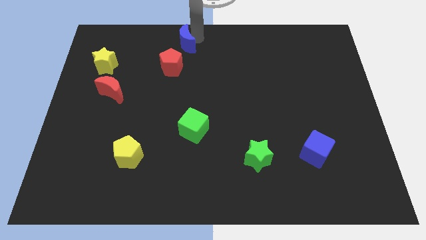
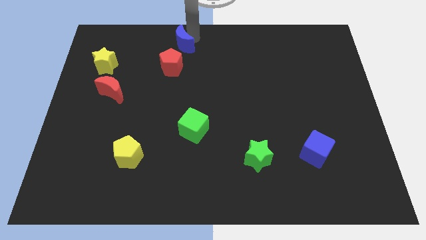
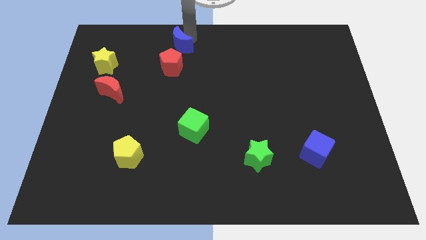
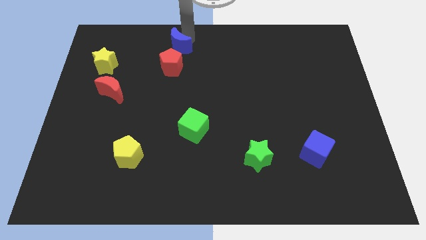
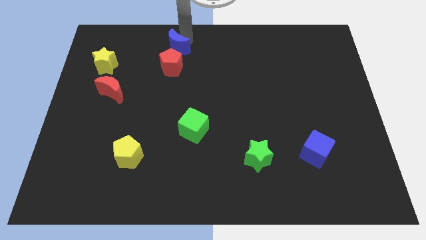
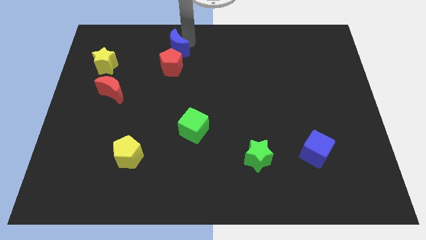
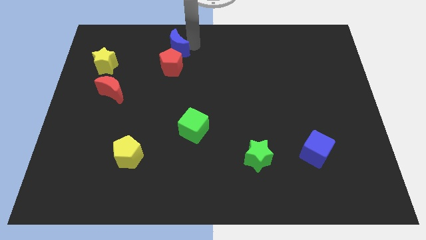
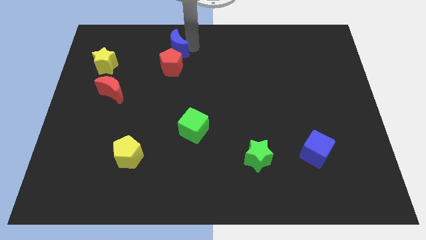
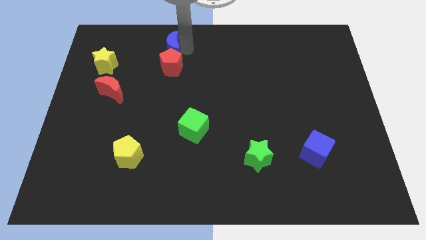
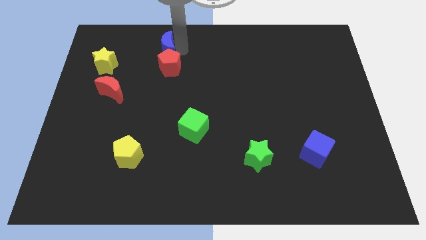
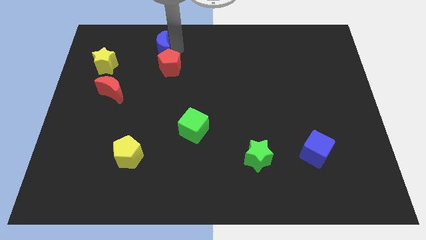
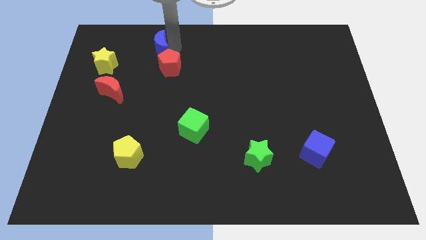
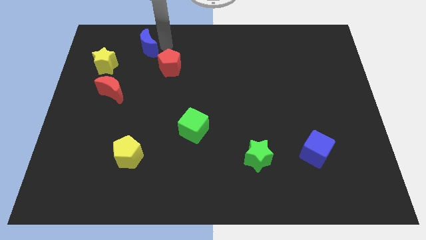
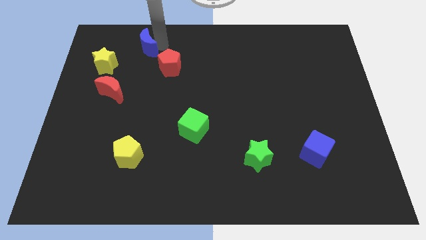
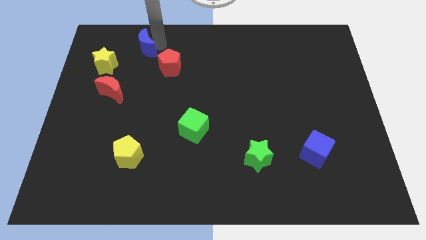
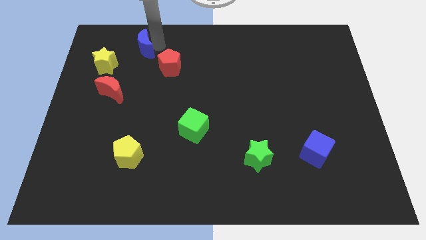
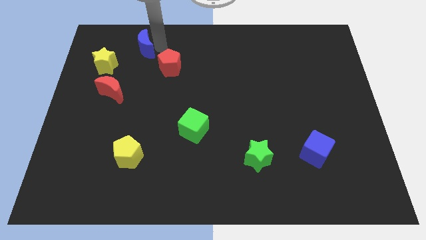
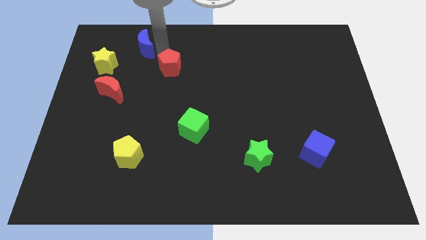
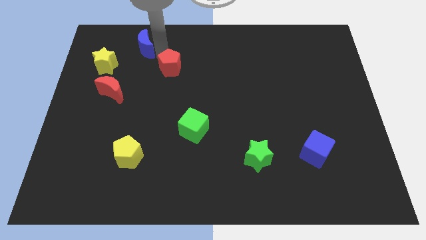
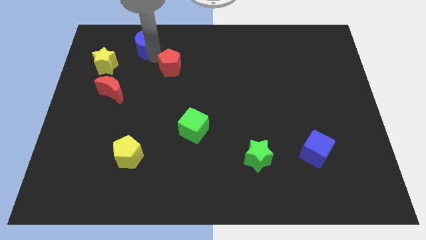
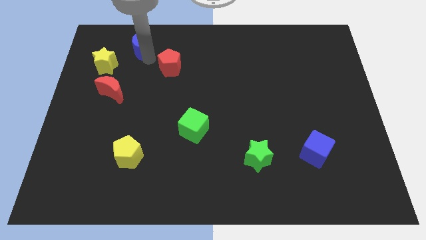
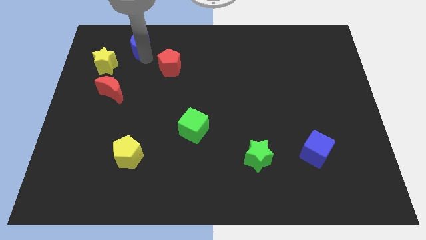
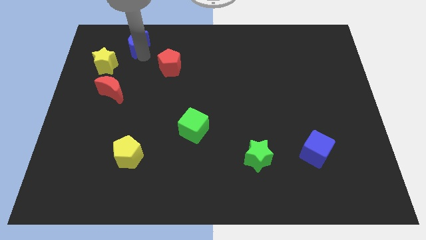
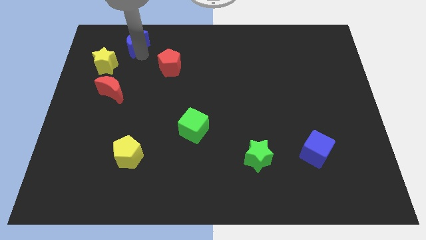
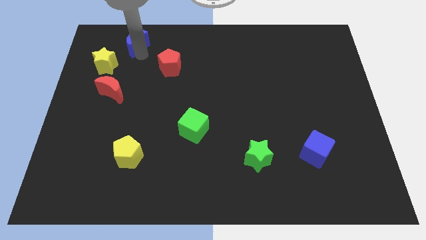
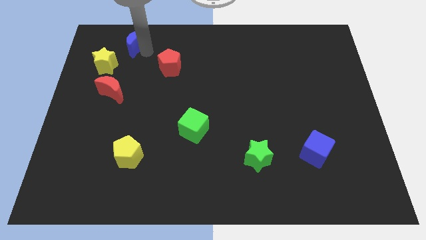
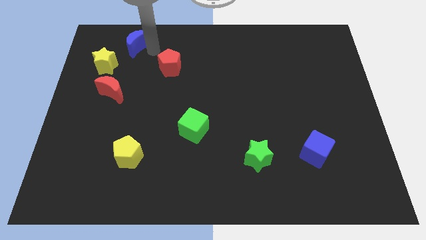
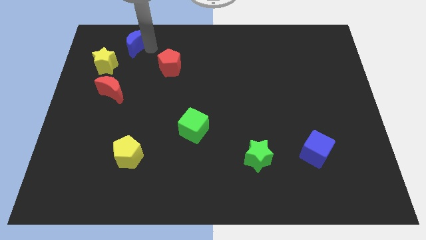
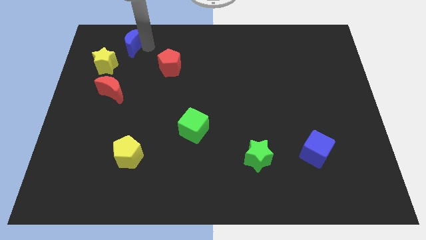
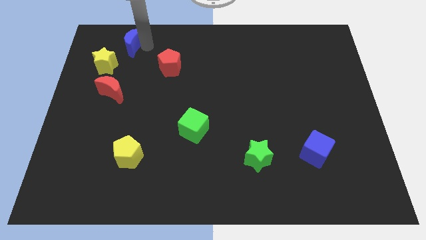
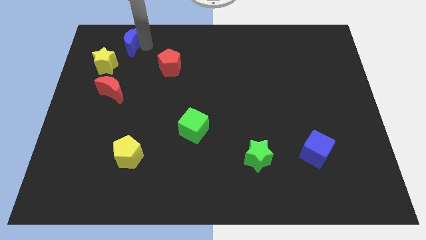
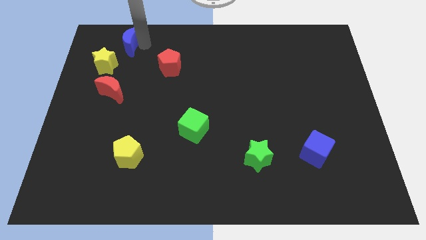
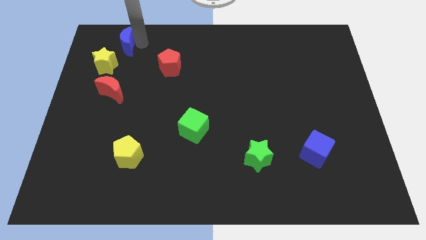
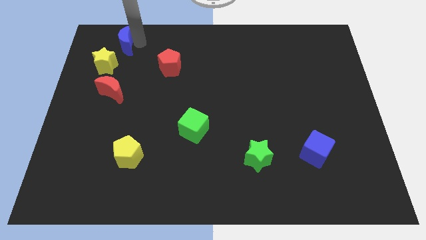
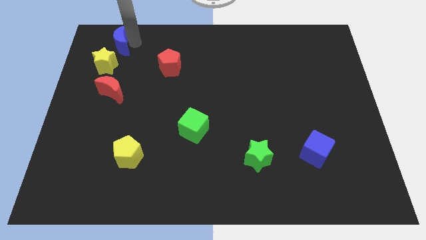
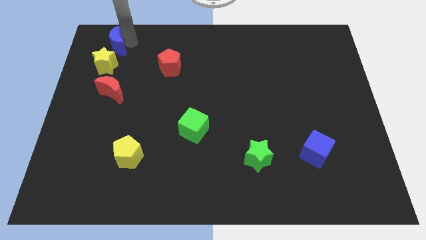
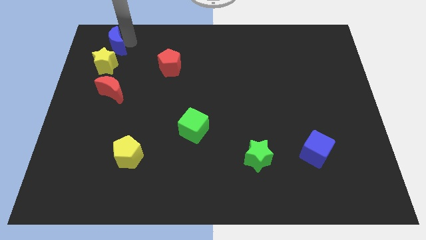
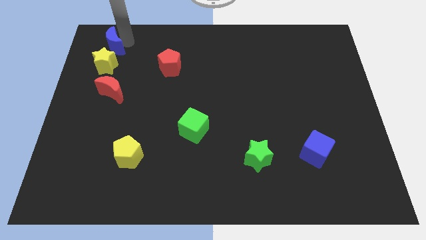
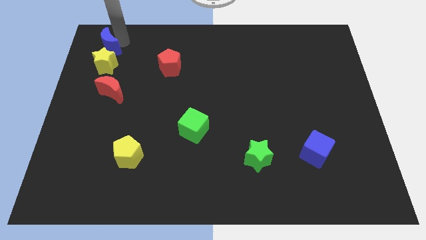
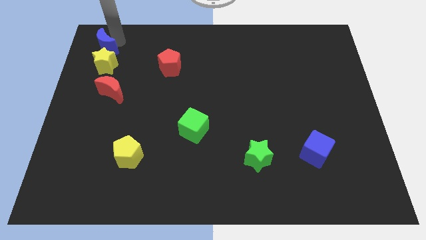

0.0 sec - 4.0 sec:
move the blue crescent above the yellow star

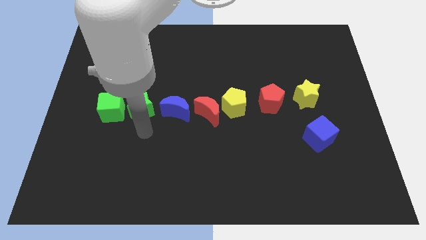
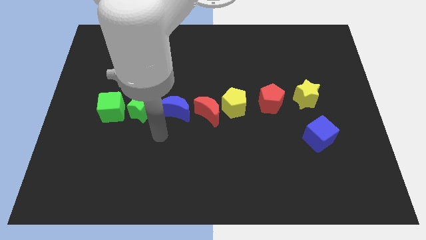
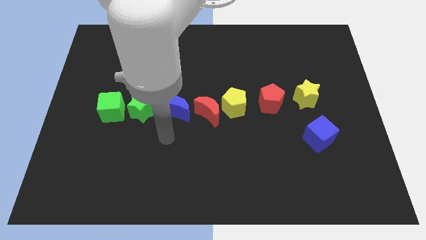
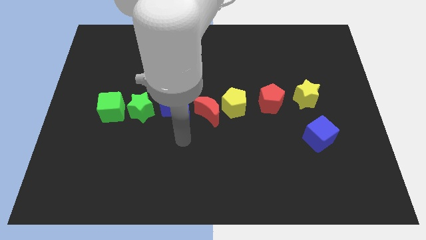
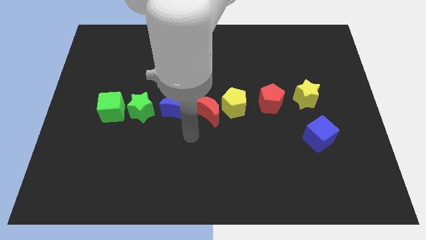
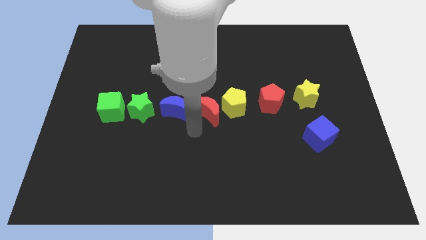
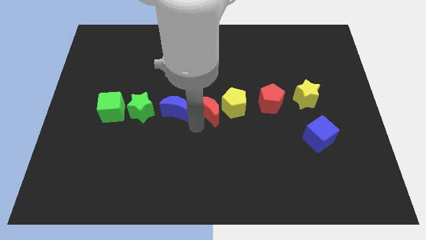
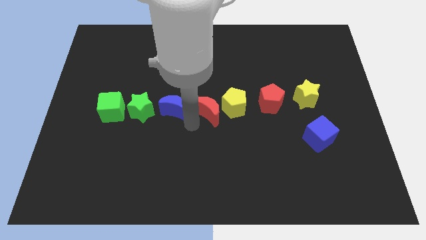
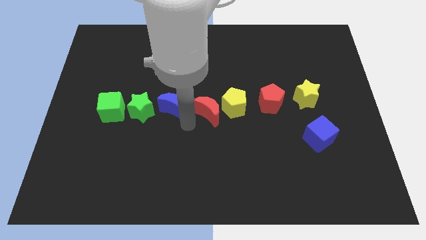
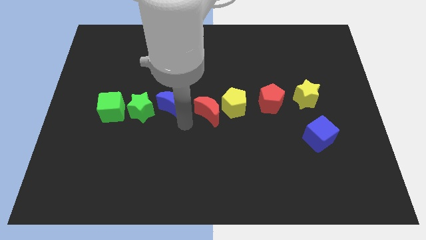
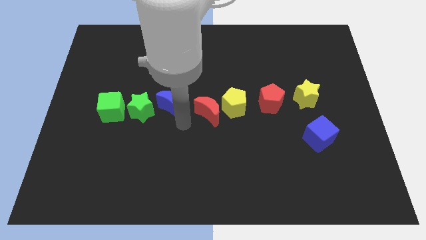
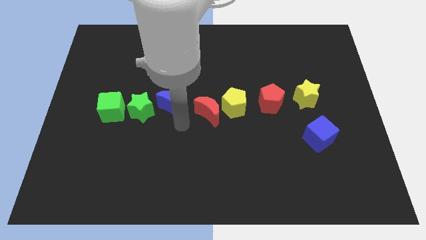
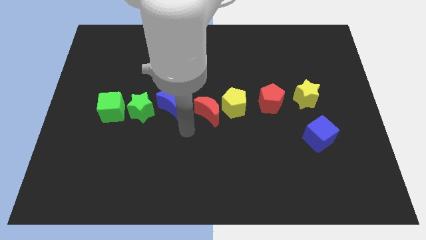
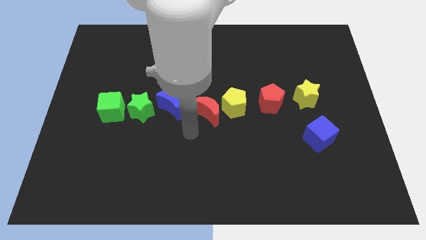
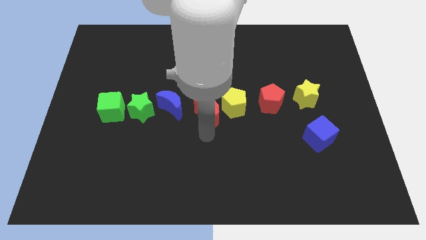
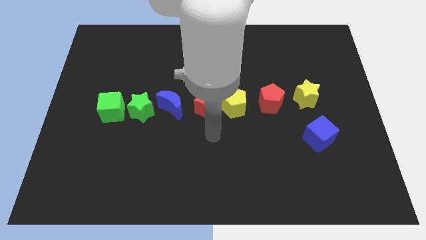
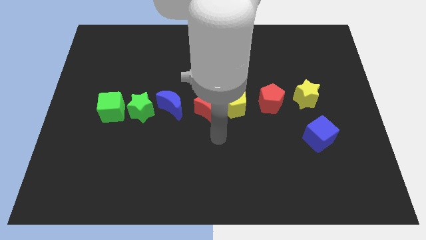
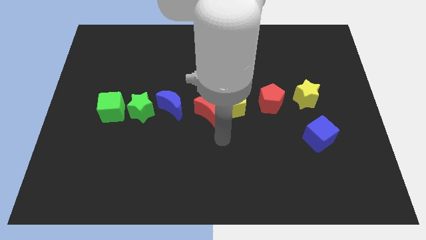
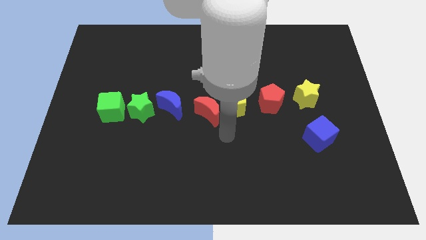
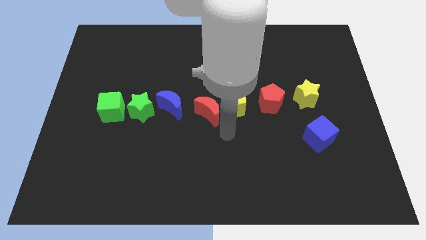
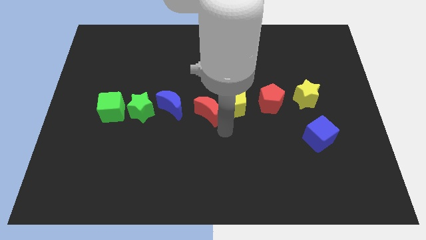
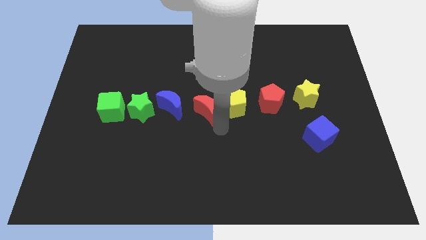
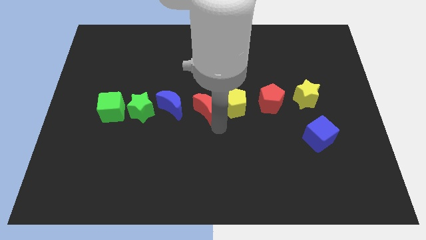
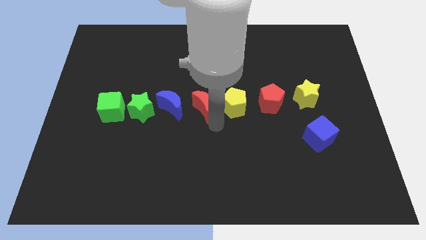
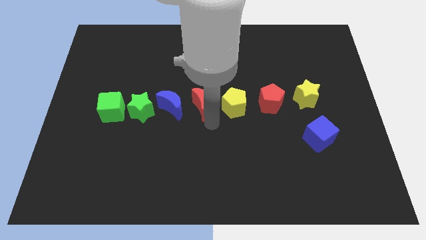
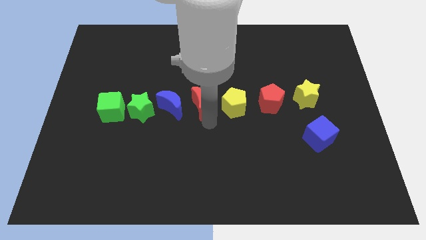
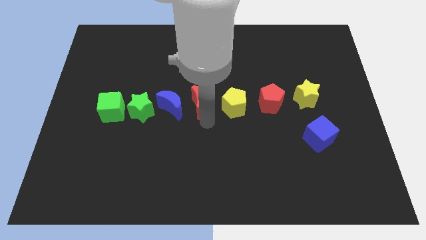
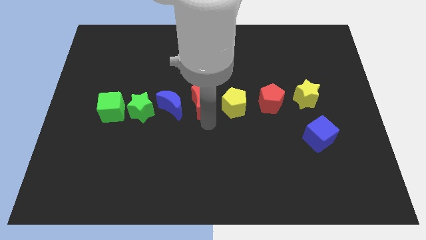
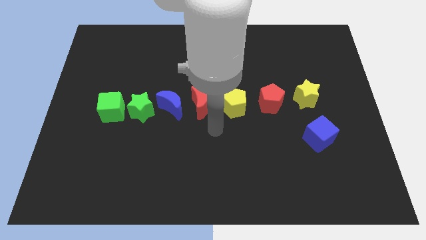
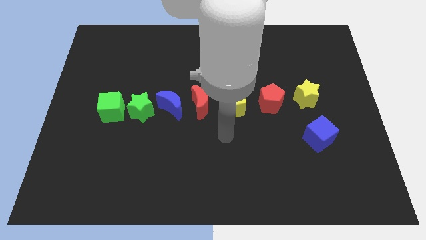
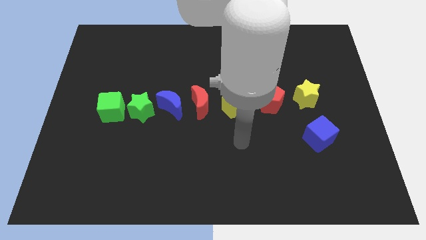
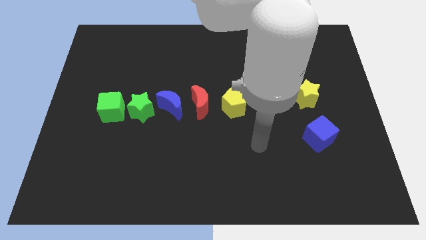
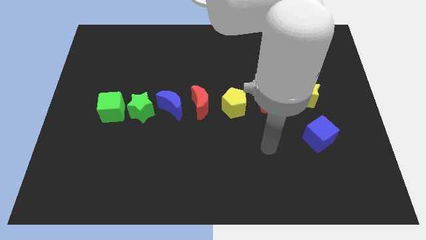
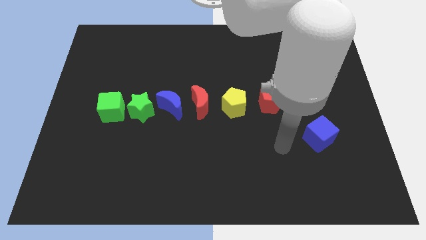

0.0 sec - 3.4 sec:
slightly push the blue crescent and red crescent upwards

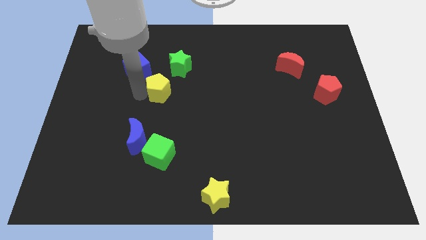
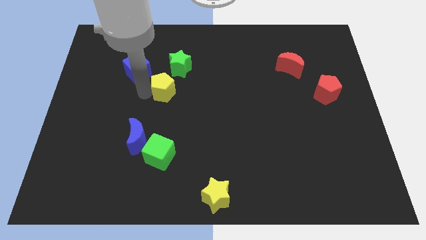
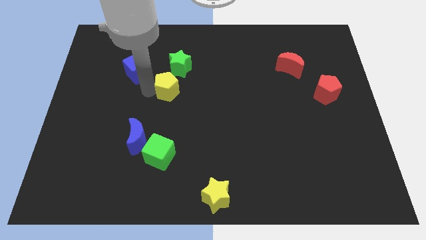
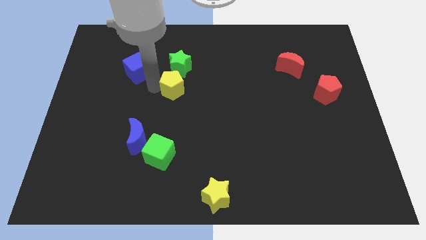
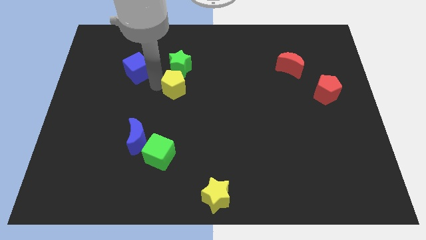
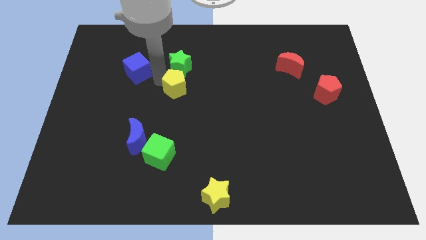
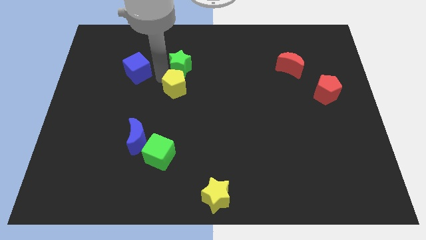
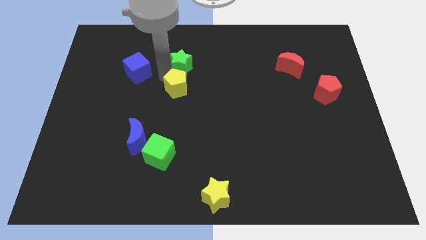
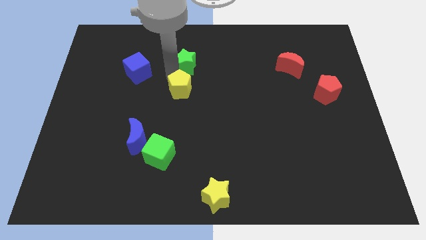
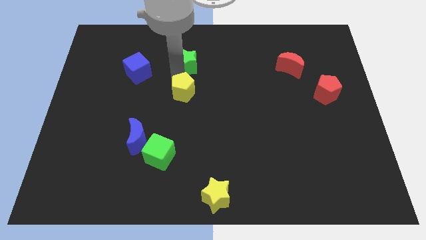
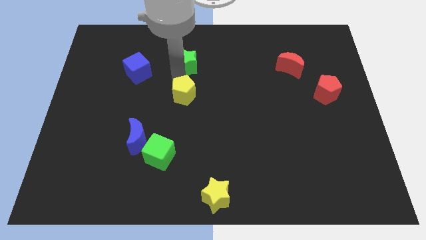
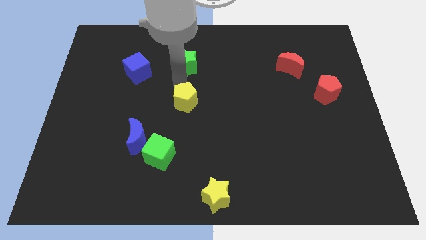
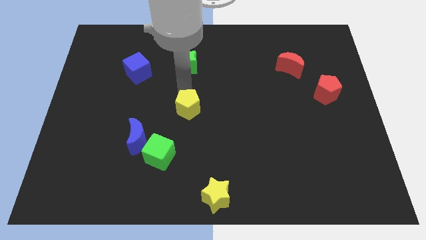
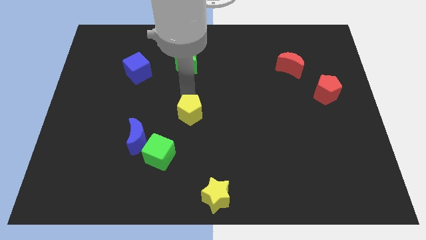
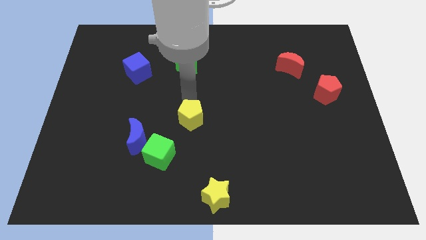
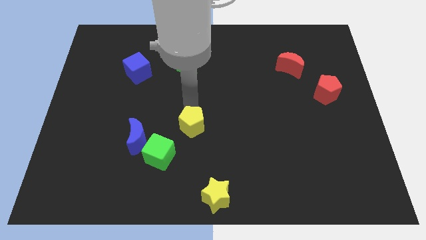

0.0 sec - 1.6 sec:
place the yellow pentagon at the center
